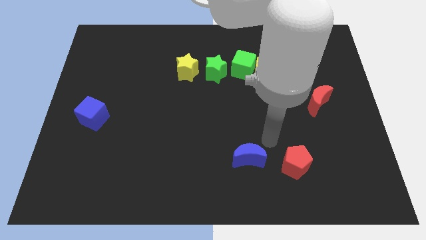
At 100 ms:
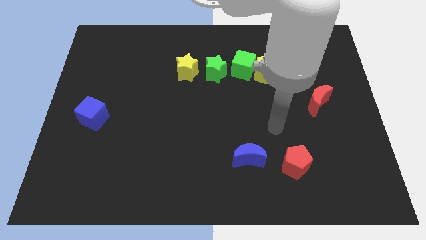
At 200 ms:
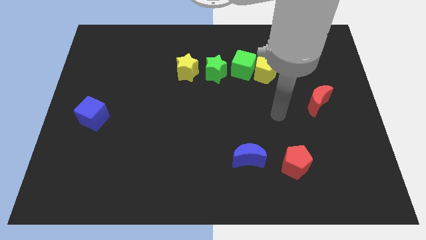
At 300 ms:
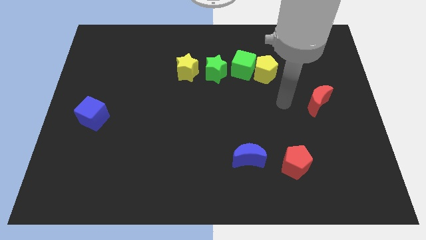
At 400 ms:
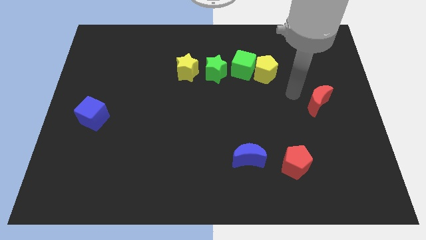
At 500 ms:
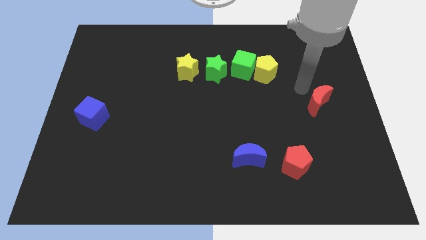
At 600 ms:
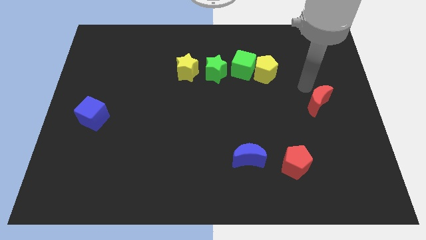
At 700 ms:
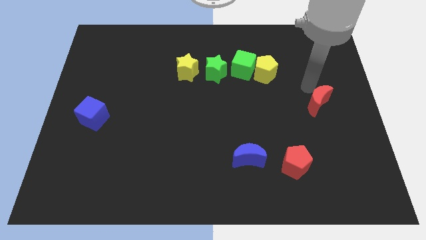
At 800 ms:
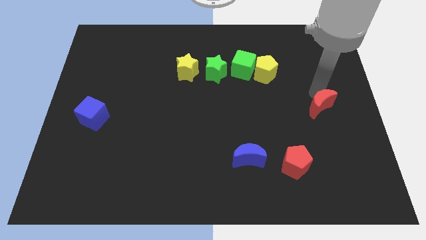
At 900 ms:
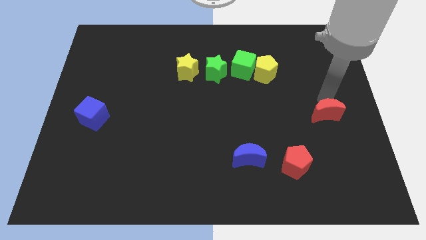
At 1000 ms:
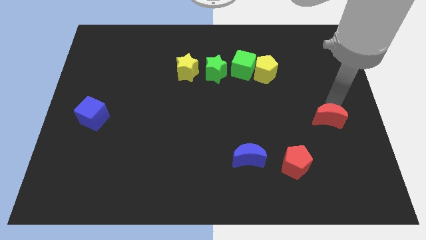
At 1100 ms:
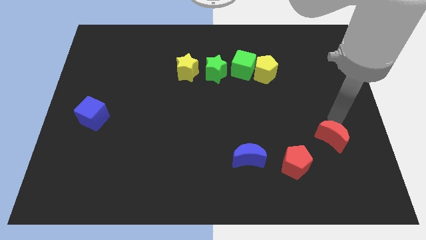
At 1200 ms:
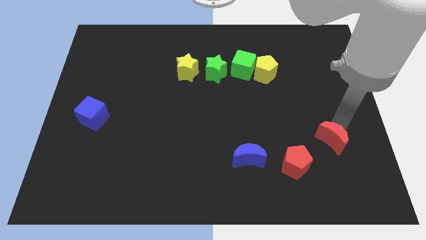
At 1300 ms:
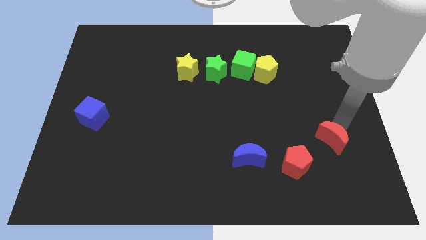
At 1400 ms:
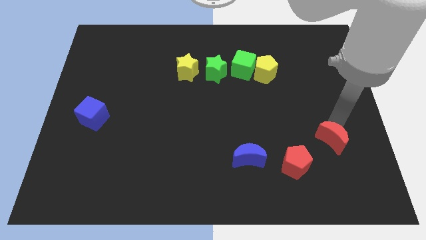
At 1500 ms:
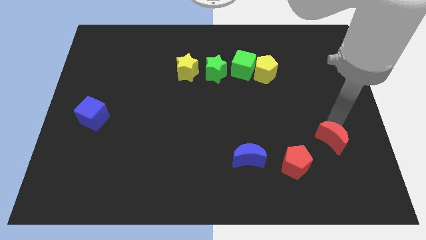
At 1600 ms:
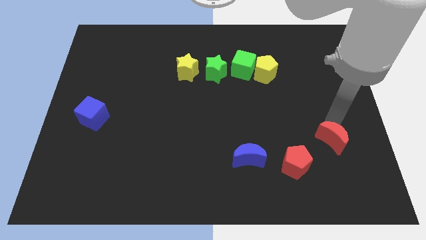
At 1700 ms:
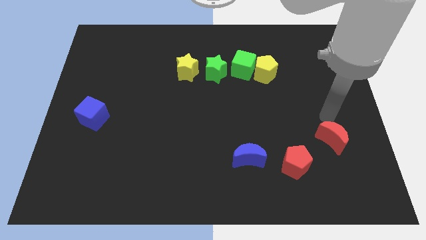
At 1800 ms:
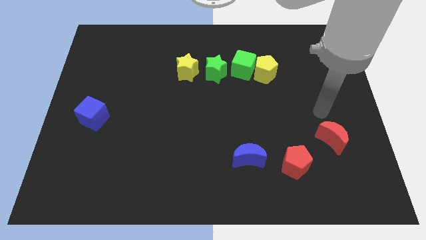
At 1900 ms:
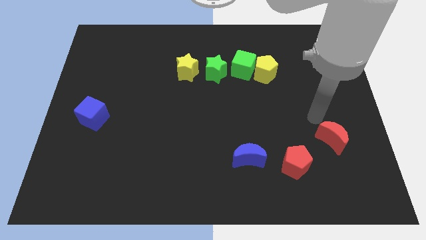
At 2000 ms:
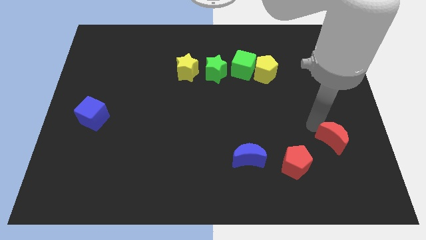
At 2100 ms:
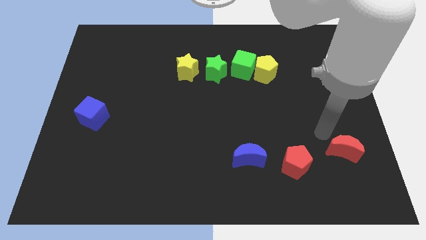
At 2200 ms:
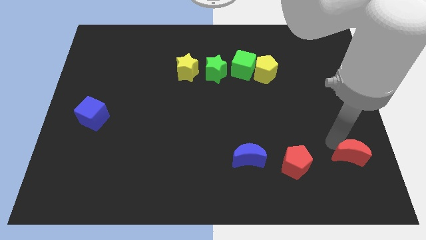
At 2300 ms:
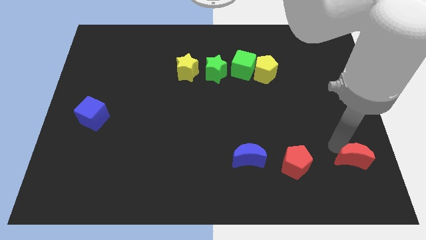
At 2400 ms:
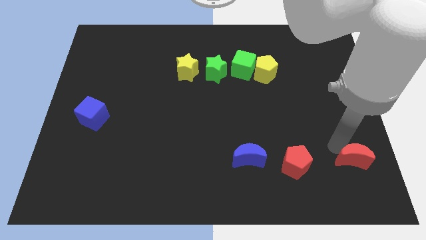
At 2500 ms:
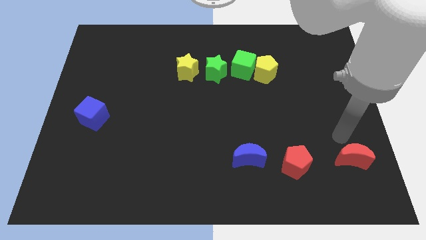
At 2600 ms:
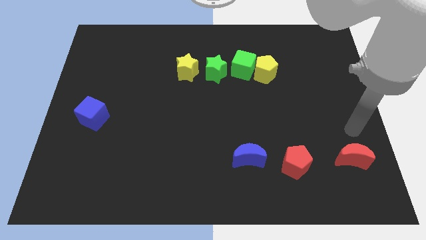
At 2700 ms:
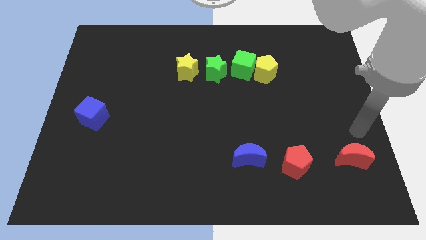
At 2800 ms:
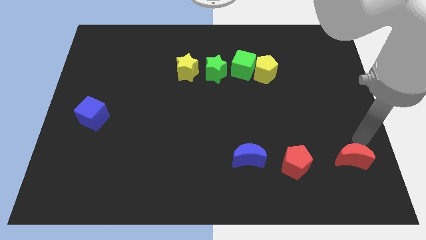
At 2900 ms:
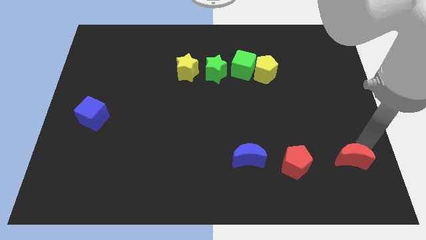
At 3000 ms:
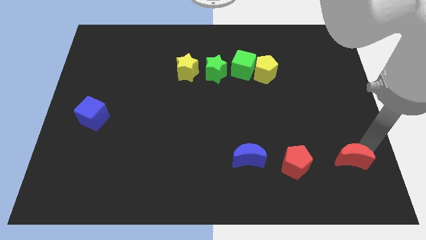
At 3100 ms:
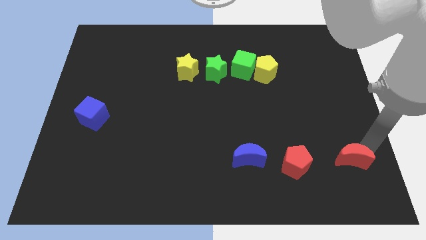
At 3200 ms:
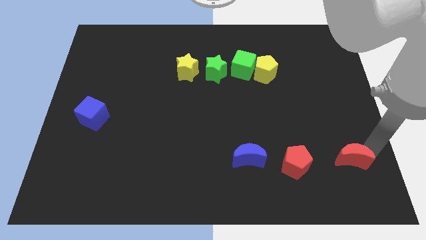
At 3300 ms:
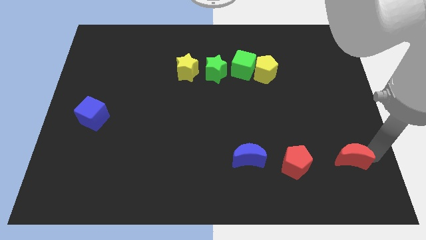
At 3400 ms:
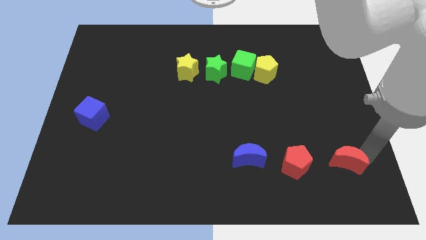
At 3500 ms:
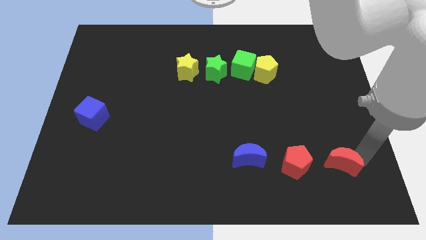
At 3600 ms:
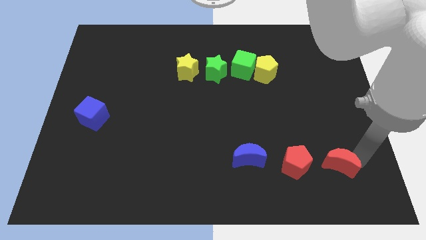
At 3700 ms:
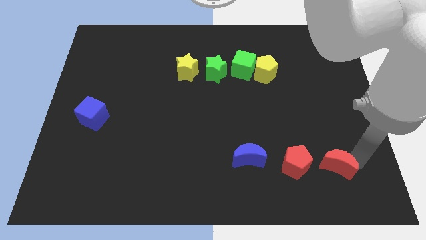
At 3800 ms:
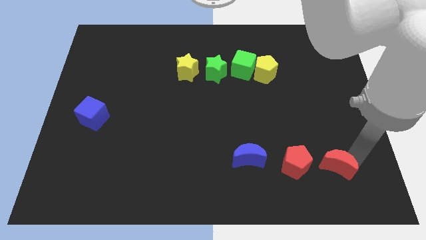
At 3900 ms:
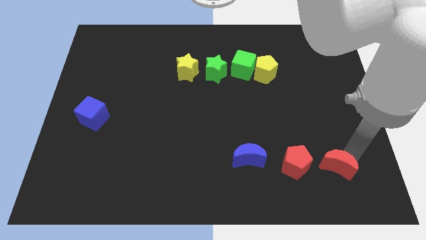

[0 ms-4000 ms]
move the red crescent to the right of the red pentagon

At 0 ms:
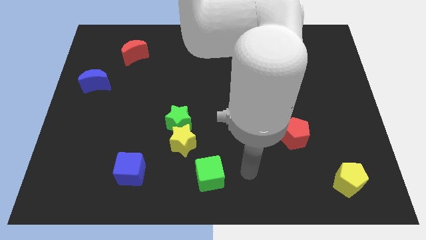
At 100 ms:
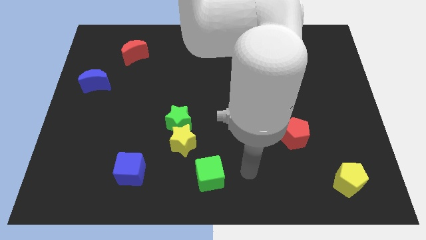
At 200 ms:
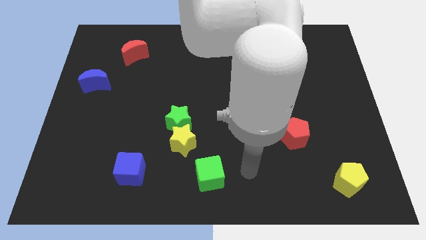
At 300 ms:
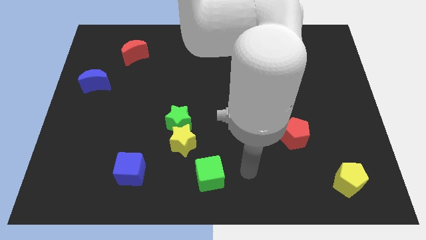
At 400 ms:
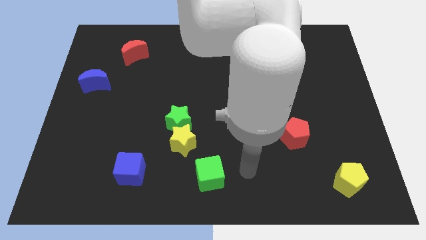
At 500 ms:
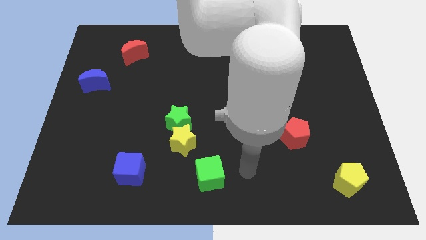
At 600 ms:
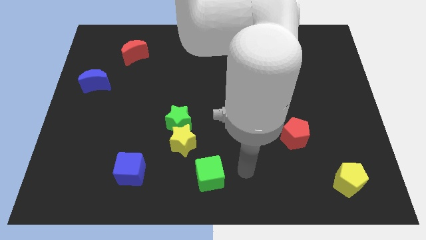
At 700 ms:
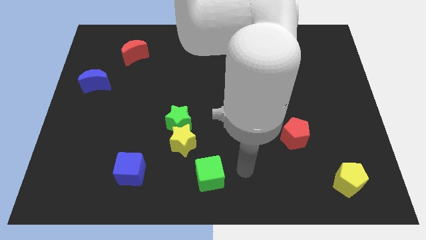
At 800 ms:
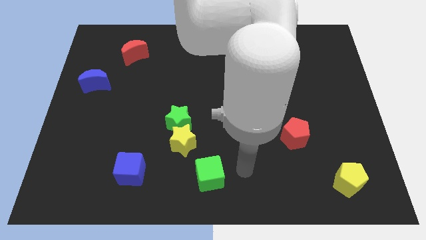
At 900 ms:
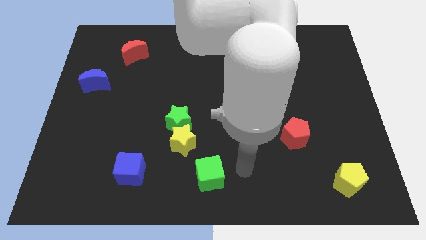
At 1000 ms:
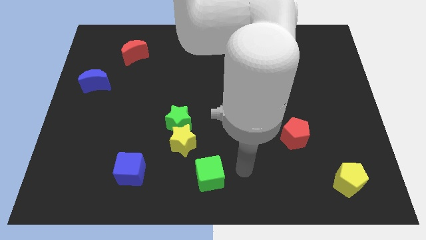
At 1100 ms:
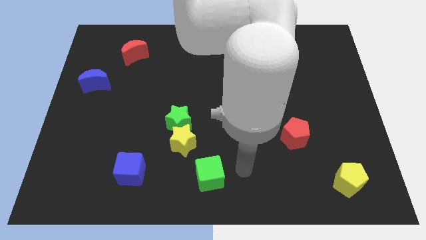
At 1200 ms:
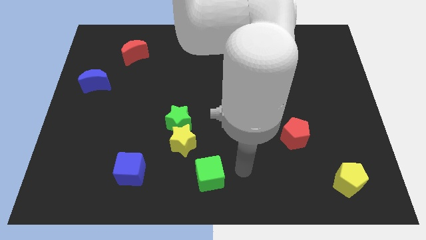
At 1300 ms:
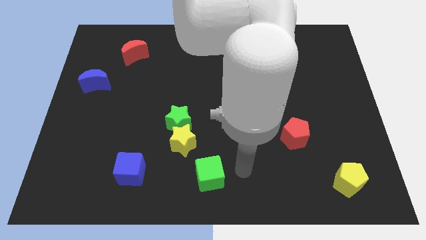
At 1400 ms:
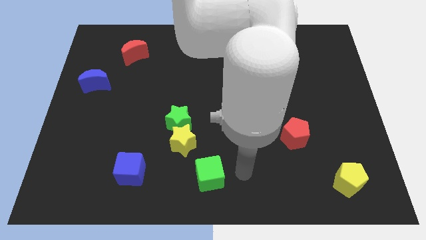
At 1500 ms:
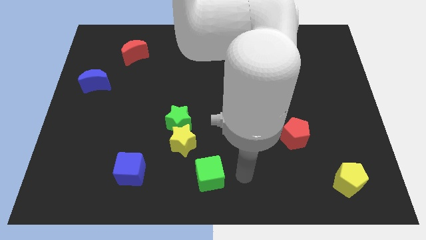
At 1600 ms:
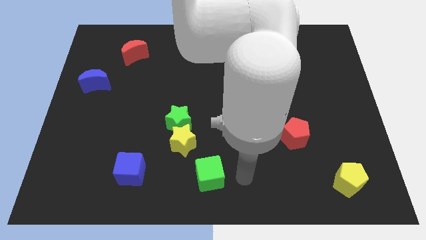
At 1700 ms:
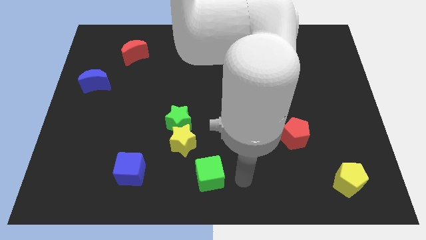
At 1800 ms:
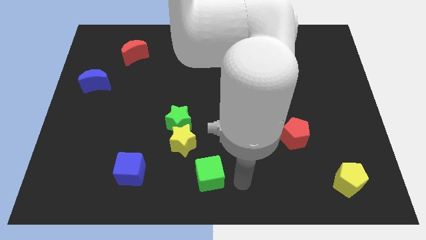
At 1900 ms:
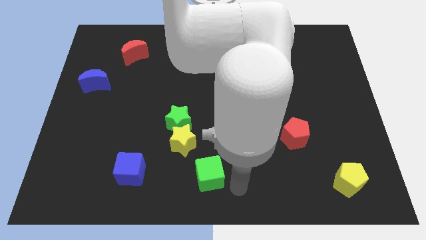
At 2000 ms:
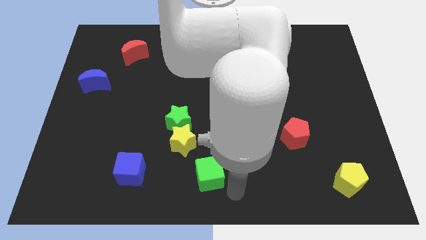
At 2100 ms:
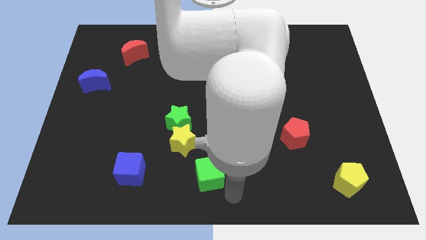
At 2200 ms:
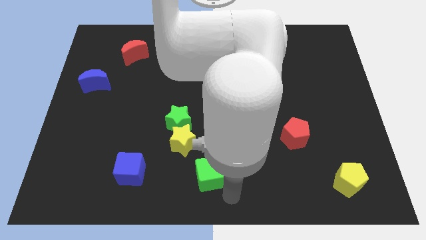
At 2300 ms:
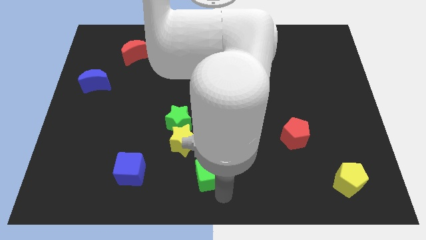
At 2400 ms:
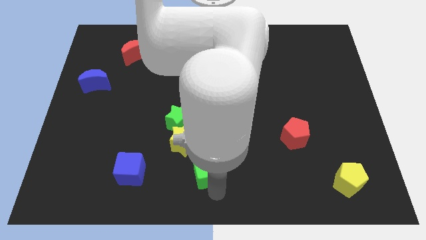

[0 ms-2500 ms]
point your arm below green cube

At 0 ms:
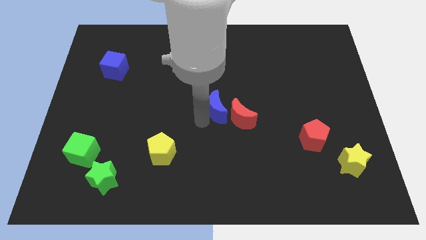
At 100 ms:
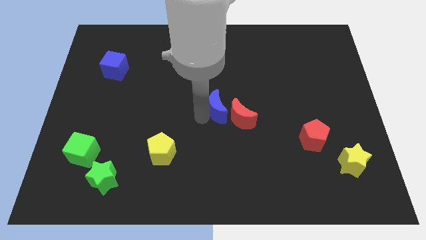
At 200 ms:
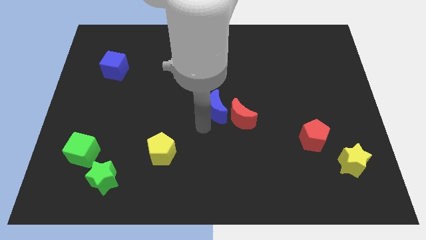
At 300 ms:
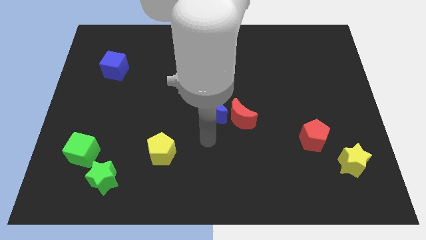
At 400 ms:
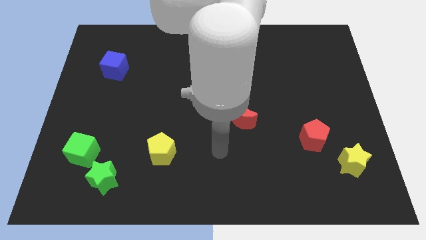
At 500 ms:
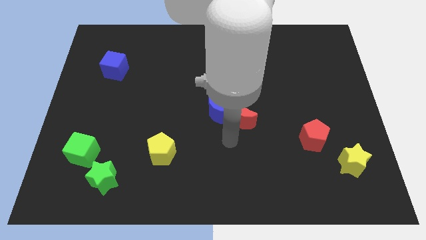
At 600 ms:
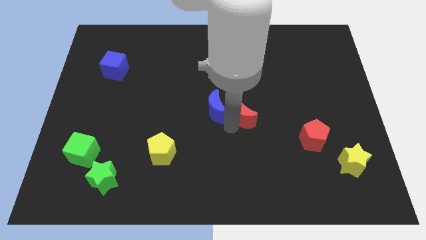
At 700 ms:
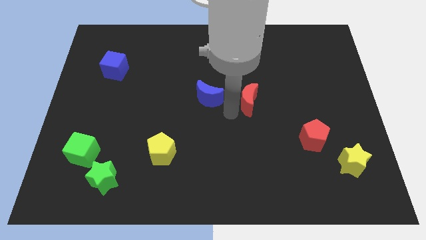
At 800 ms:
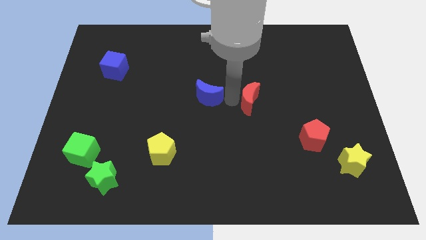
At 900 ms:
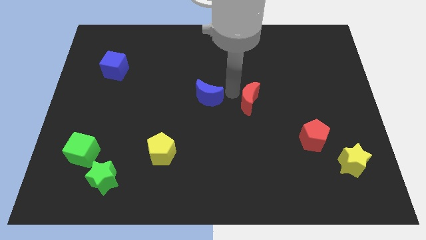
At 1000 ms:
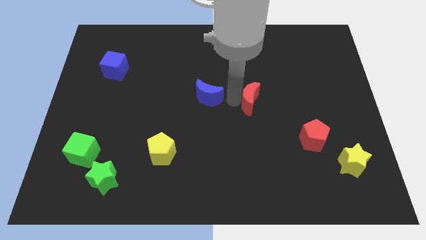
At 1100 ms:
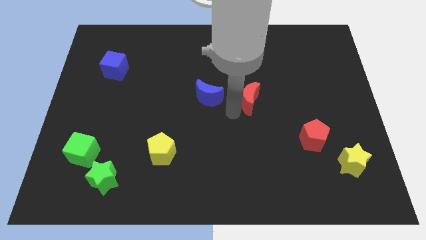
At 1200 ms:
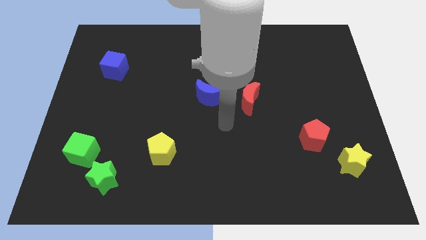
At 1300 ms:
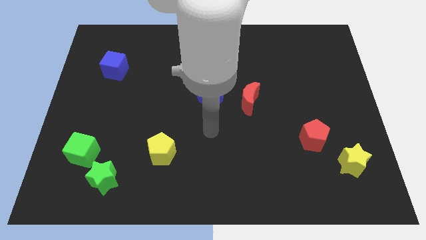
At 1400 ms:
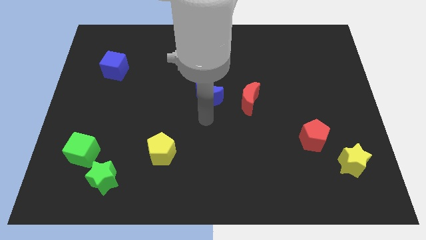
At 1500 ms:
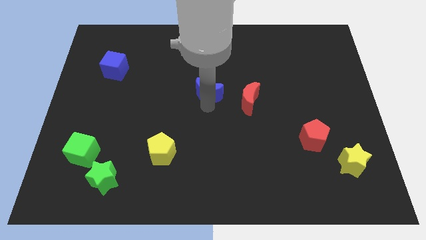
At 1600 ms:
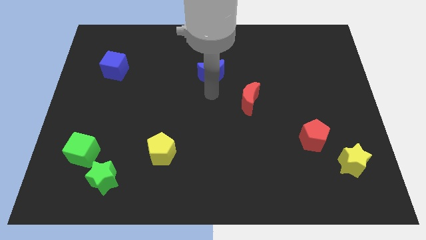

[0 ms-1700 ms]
move the blue moon away from the red moon

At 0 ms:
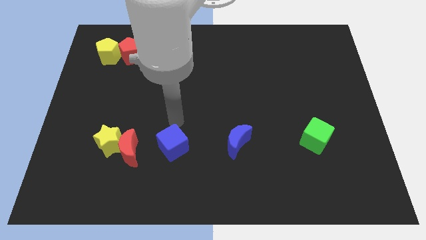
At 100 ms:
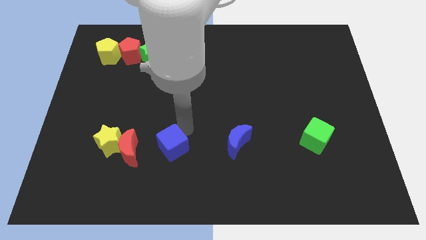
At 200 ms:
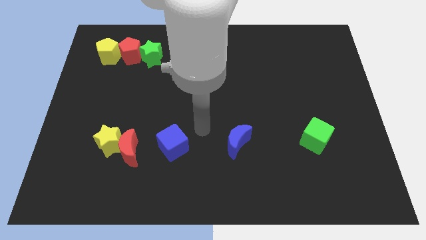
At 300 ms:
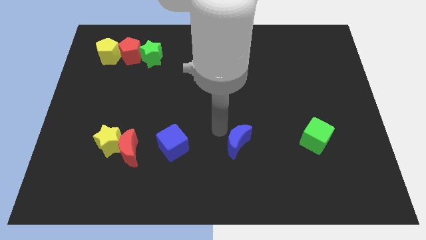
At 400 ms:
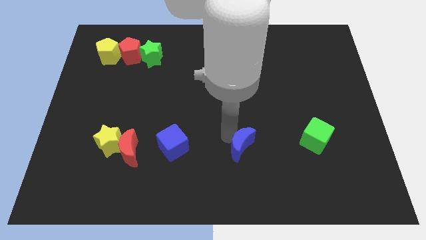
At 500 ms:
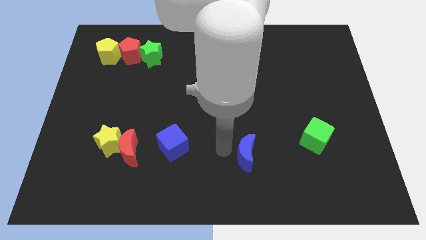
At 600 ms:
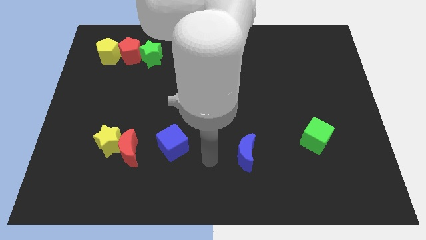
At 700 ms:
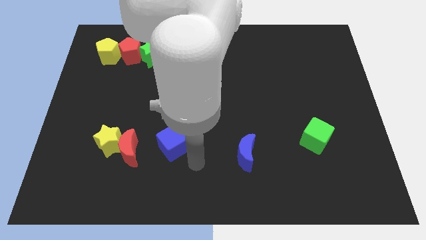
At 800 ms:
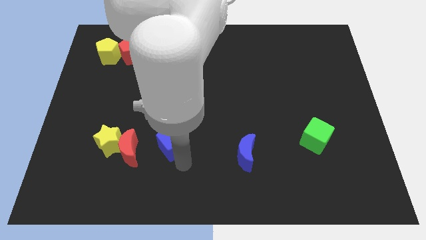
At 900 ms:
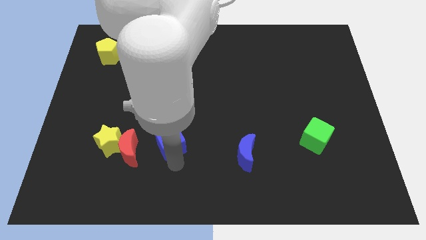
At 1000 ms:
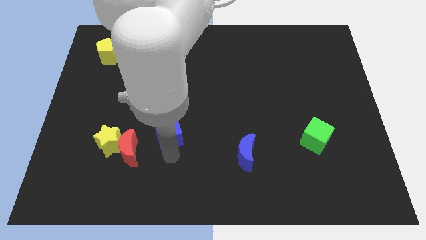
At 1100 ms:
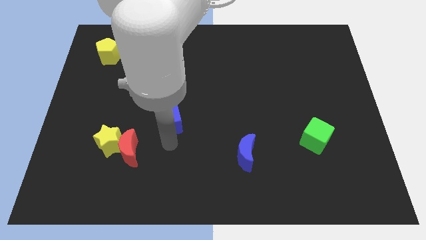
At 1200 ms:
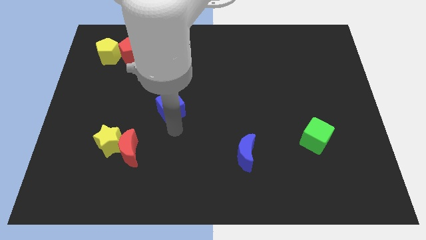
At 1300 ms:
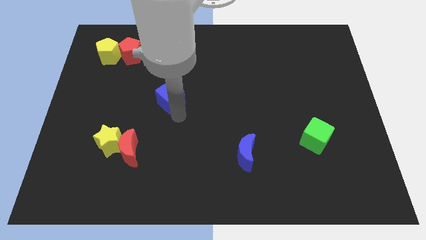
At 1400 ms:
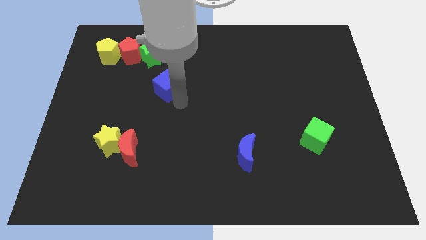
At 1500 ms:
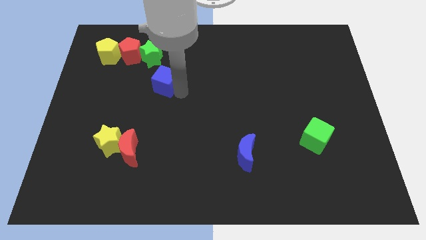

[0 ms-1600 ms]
push the blue cube towards the green star
